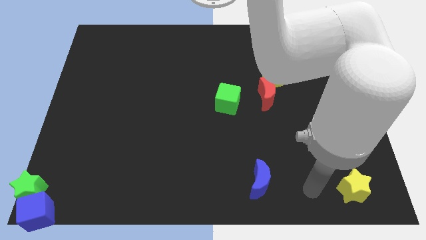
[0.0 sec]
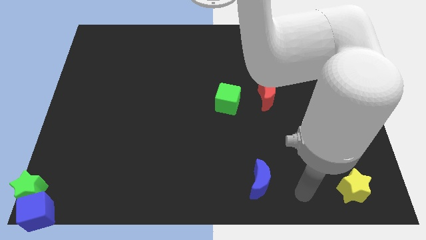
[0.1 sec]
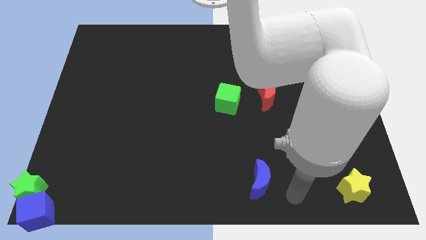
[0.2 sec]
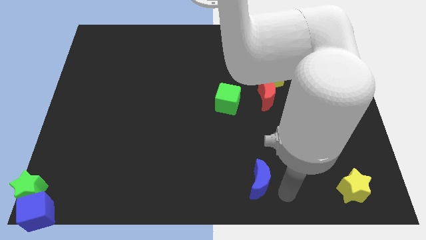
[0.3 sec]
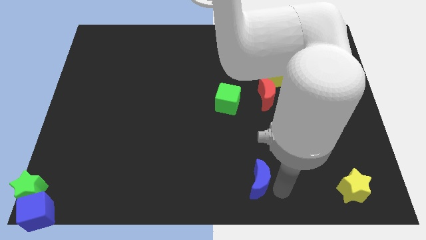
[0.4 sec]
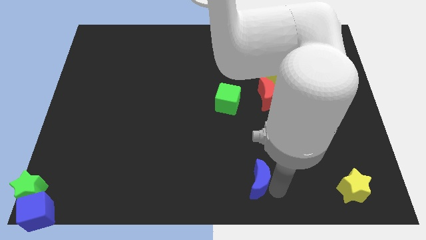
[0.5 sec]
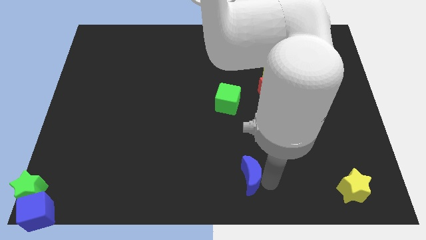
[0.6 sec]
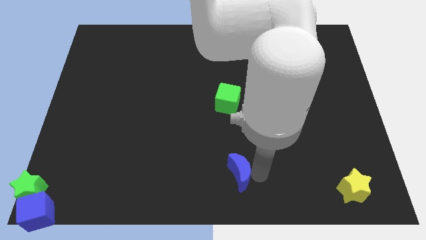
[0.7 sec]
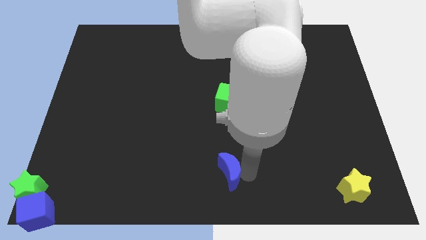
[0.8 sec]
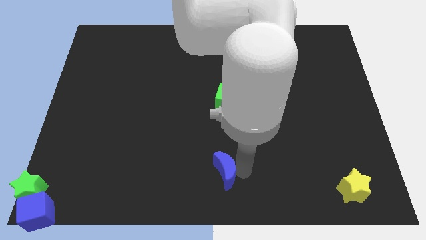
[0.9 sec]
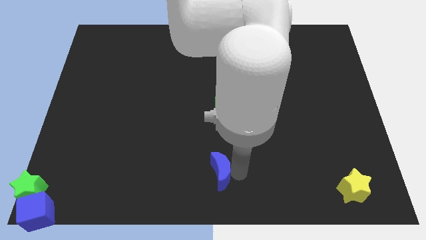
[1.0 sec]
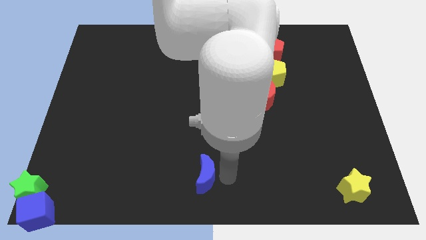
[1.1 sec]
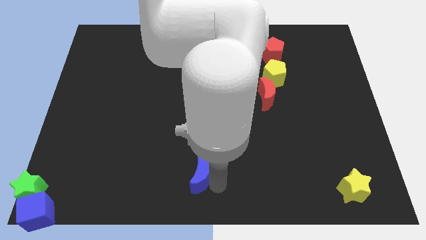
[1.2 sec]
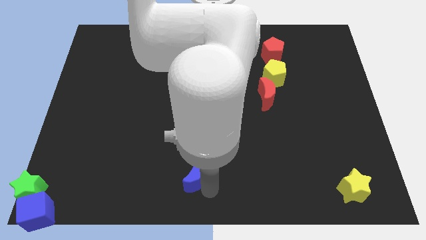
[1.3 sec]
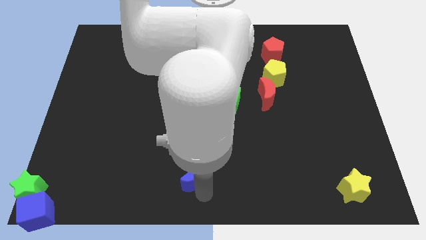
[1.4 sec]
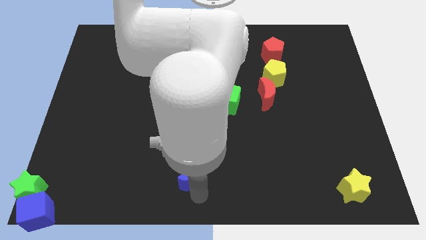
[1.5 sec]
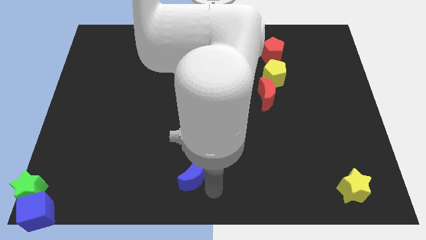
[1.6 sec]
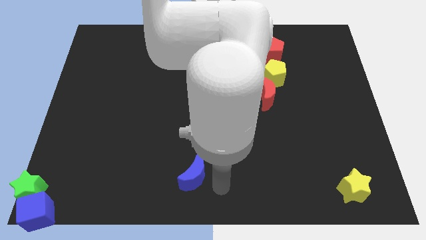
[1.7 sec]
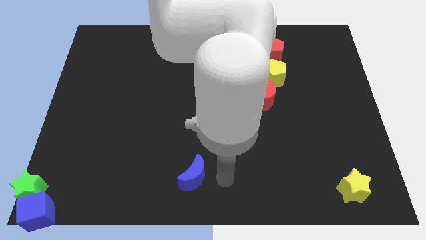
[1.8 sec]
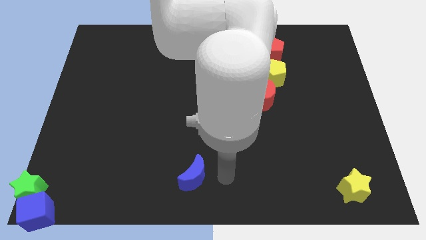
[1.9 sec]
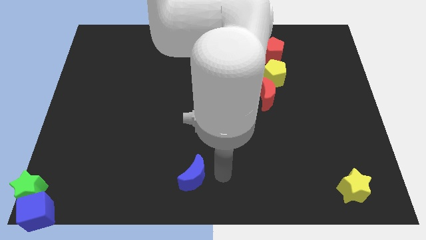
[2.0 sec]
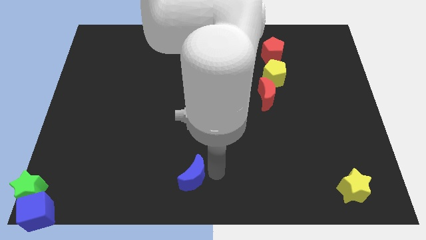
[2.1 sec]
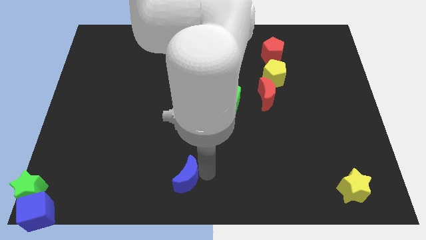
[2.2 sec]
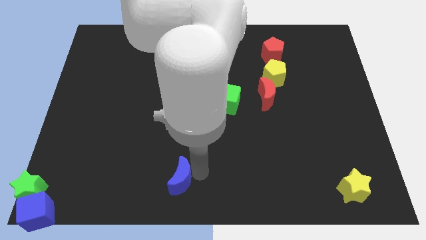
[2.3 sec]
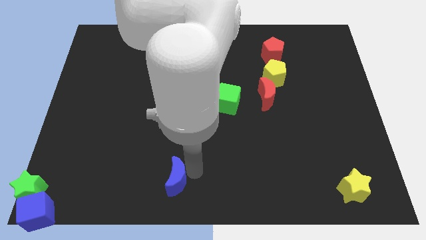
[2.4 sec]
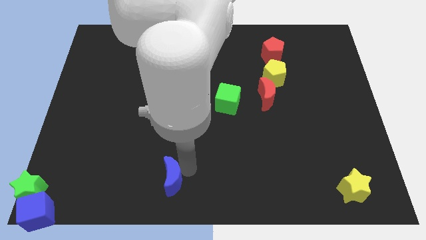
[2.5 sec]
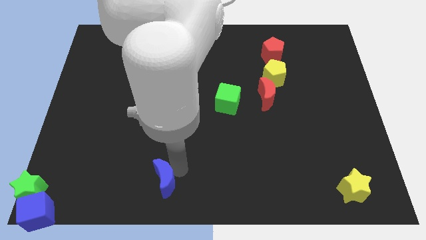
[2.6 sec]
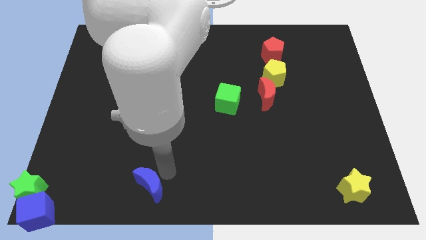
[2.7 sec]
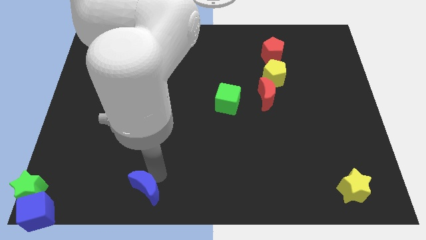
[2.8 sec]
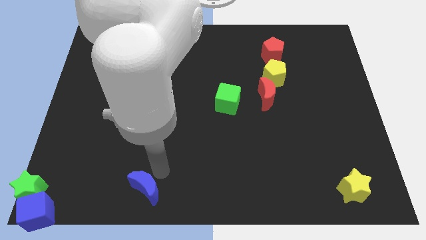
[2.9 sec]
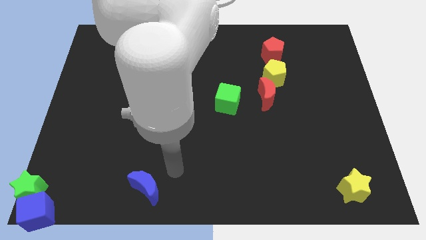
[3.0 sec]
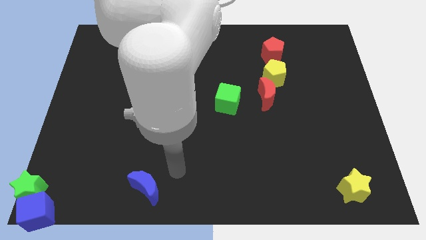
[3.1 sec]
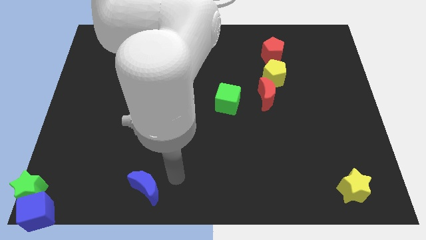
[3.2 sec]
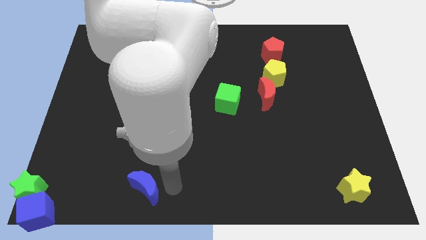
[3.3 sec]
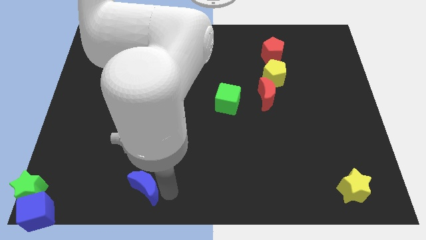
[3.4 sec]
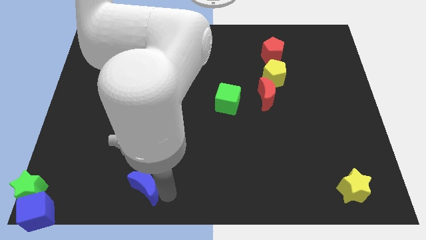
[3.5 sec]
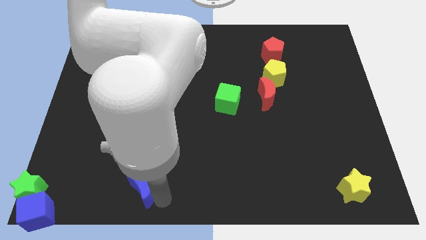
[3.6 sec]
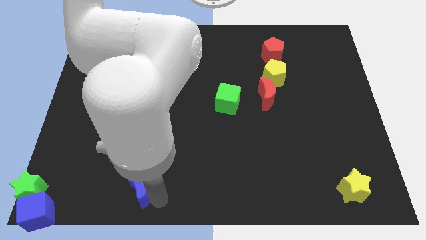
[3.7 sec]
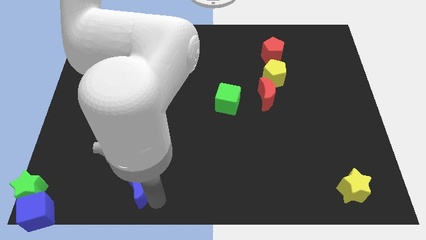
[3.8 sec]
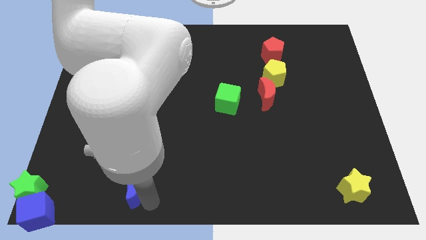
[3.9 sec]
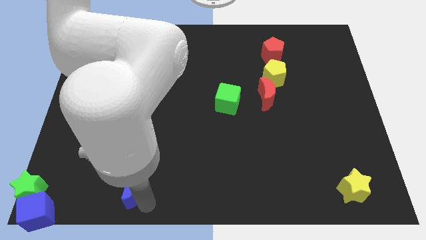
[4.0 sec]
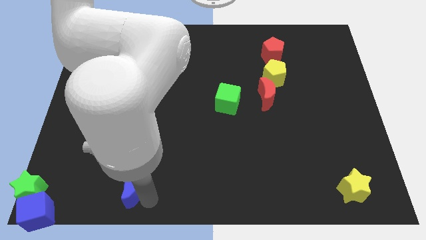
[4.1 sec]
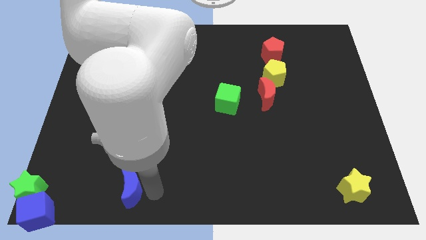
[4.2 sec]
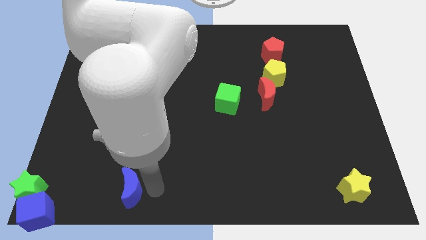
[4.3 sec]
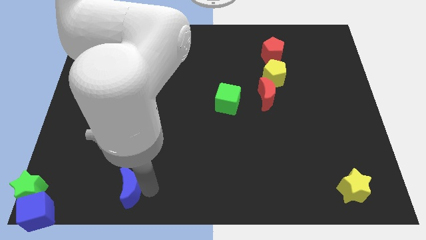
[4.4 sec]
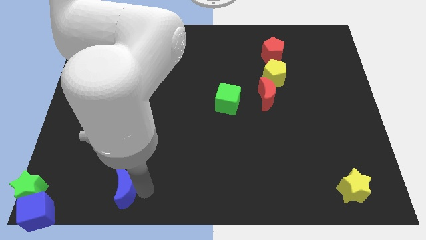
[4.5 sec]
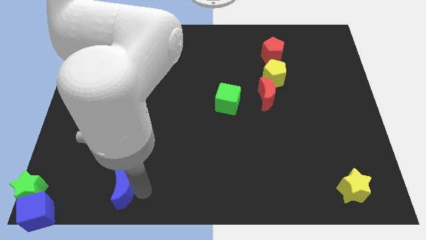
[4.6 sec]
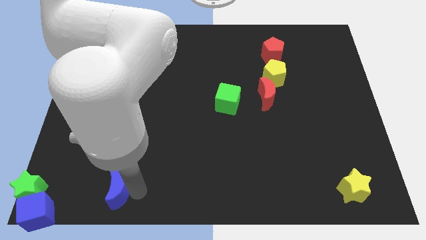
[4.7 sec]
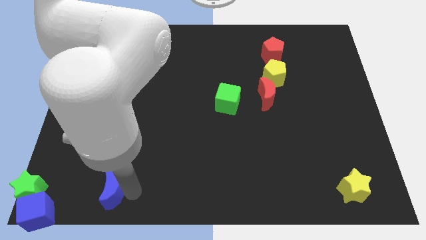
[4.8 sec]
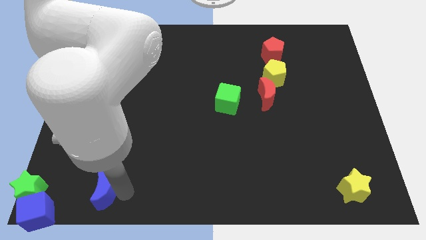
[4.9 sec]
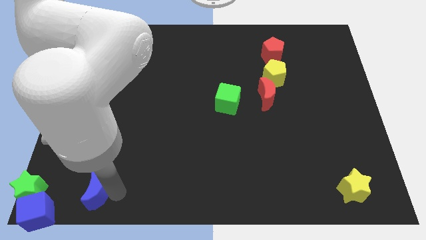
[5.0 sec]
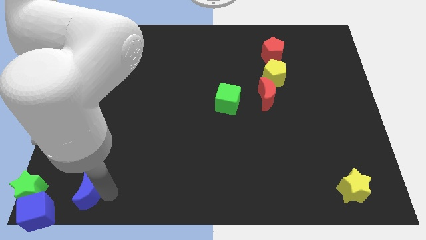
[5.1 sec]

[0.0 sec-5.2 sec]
move the blue crescent towards the blue cube

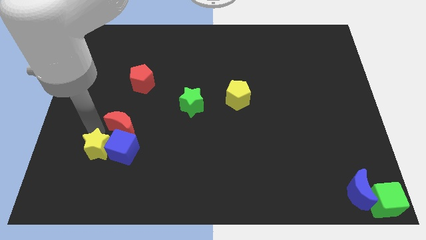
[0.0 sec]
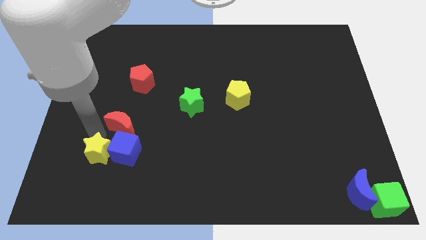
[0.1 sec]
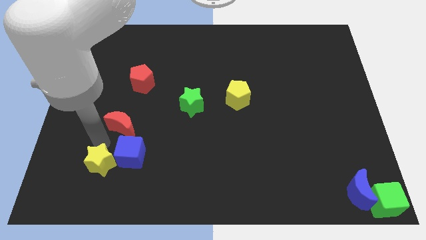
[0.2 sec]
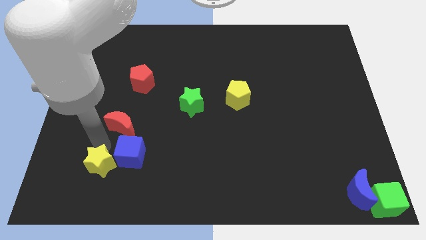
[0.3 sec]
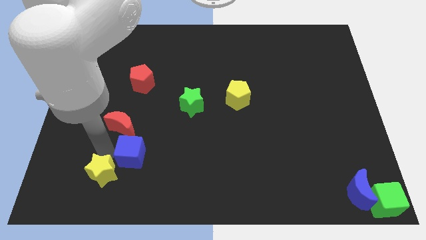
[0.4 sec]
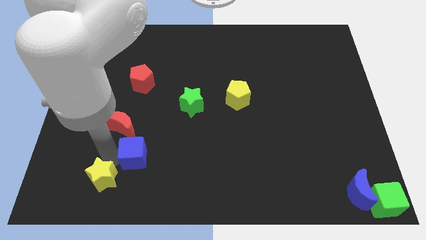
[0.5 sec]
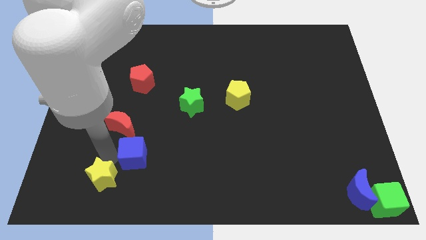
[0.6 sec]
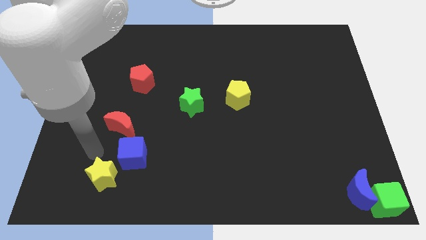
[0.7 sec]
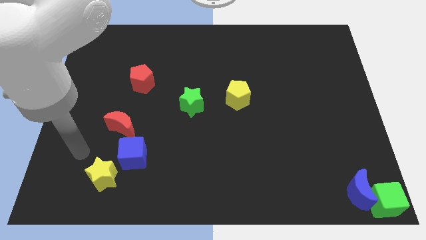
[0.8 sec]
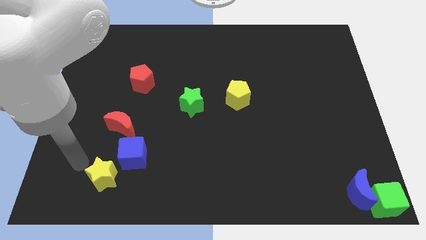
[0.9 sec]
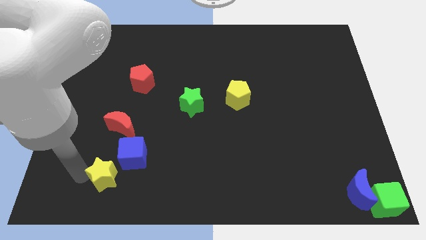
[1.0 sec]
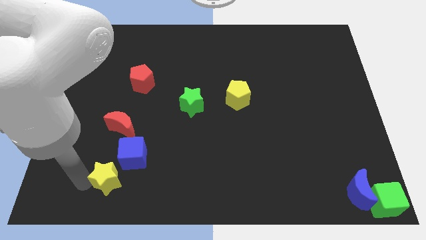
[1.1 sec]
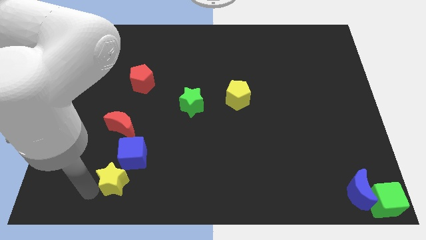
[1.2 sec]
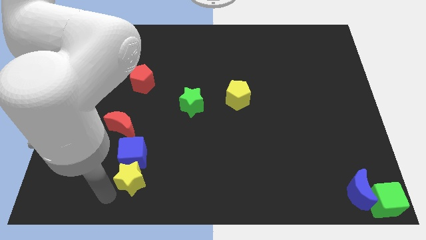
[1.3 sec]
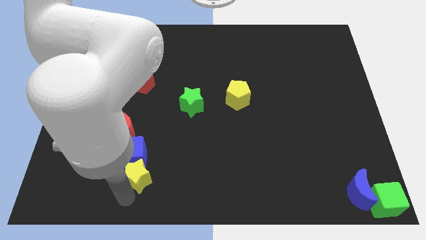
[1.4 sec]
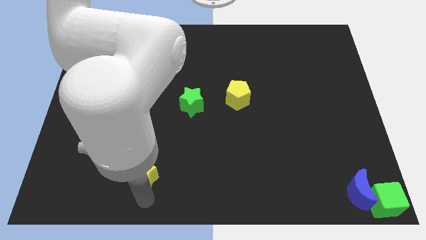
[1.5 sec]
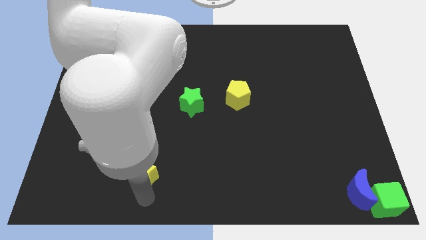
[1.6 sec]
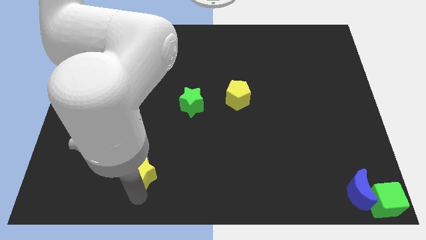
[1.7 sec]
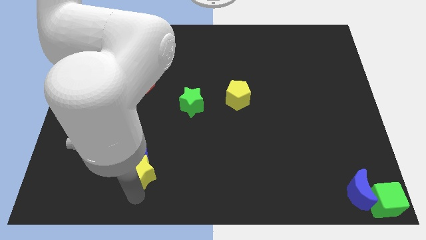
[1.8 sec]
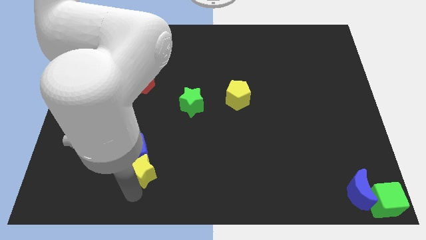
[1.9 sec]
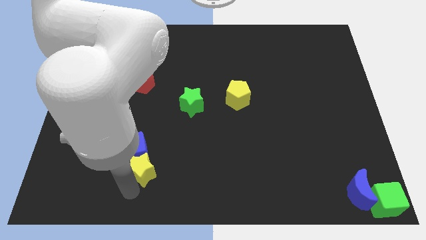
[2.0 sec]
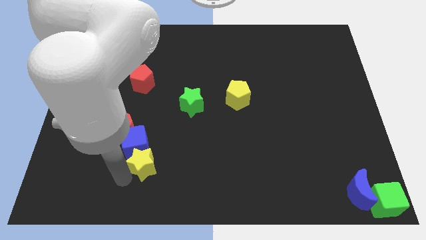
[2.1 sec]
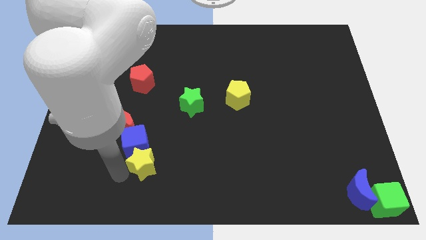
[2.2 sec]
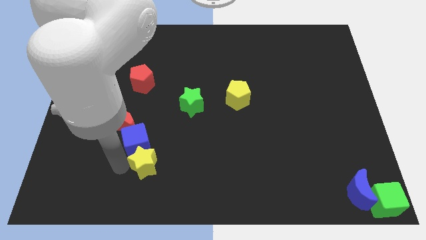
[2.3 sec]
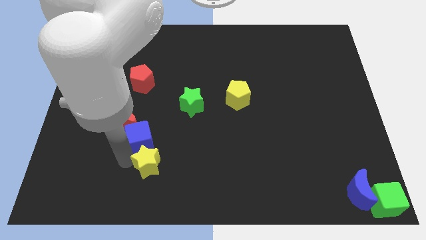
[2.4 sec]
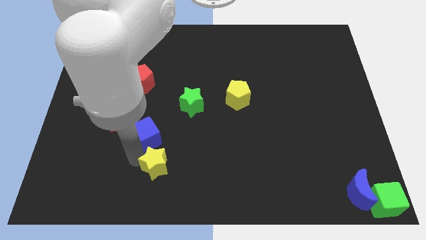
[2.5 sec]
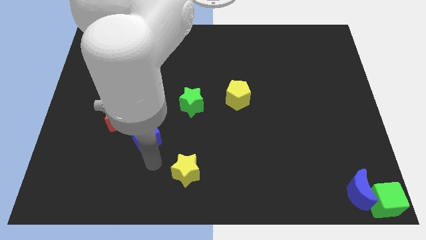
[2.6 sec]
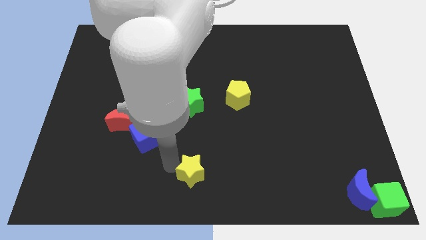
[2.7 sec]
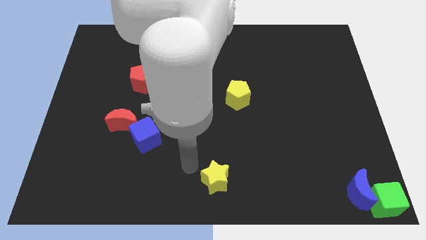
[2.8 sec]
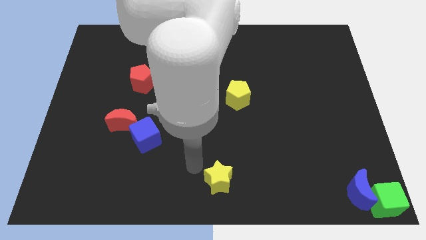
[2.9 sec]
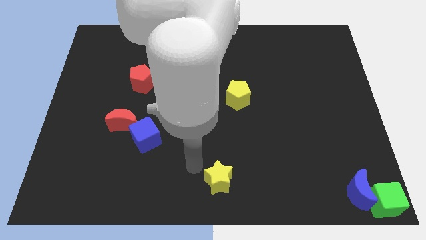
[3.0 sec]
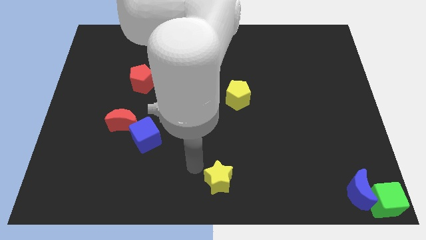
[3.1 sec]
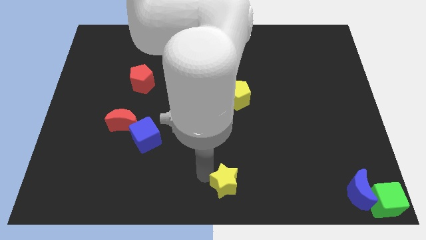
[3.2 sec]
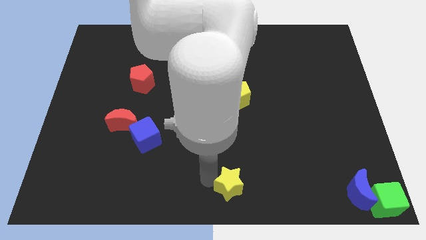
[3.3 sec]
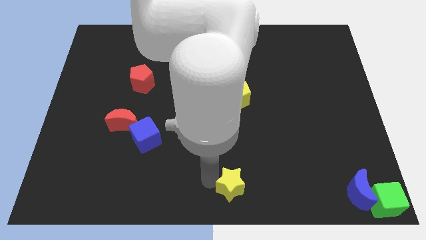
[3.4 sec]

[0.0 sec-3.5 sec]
separate the blue cube and the yellow star
